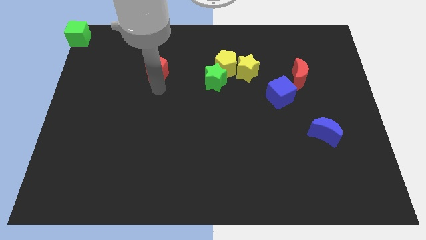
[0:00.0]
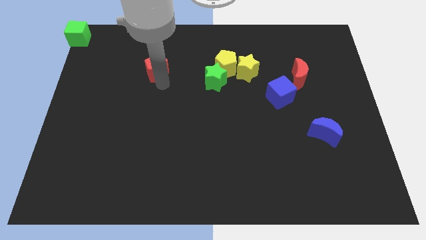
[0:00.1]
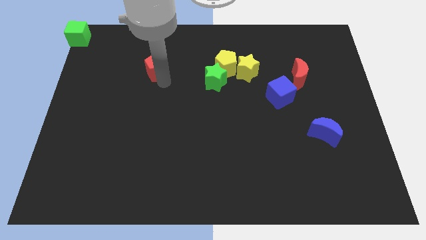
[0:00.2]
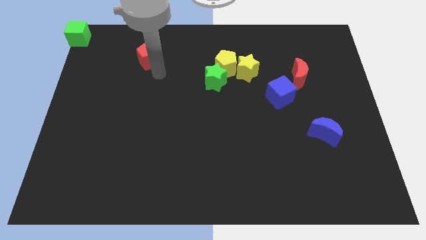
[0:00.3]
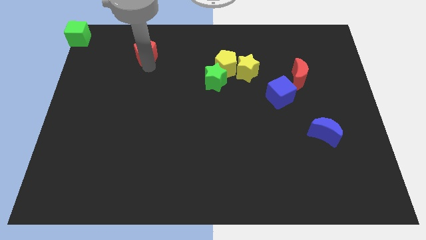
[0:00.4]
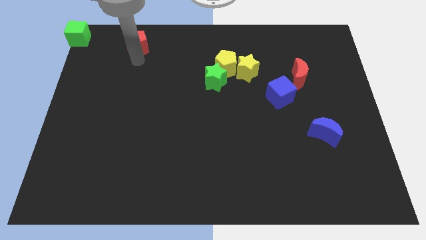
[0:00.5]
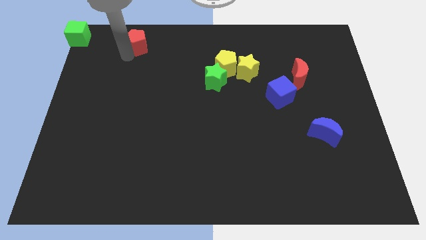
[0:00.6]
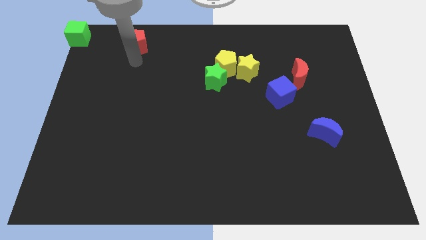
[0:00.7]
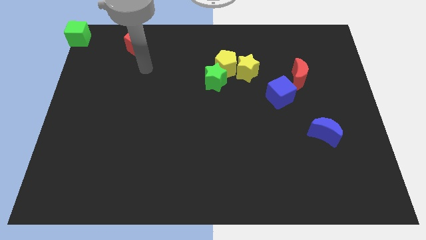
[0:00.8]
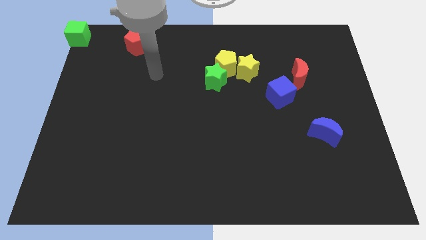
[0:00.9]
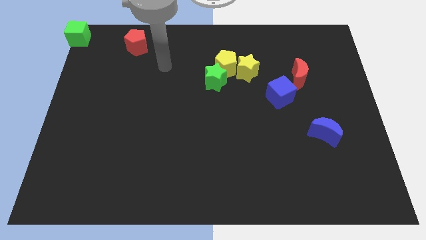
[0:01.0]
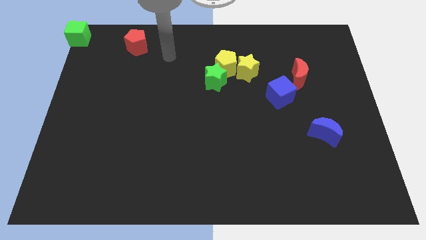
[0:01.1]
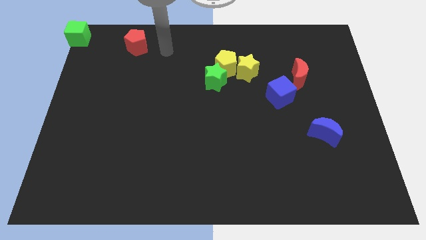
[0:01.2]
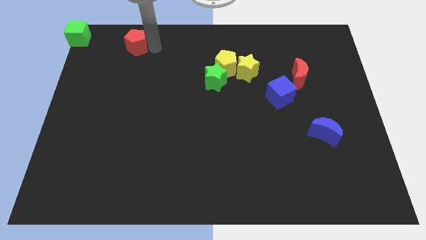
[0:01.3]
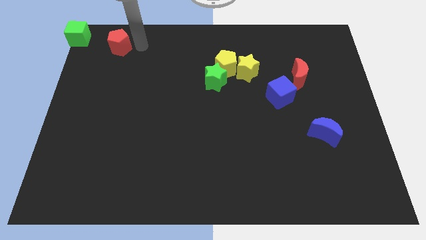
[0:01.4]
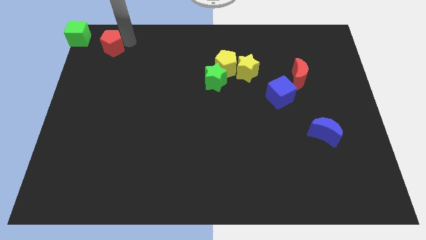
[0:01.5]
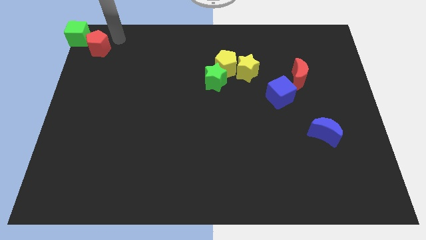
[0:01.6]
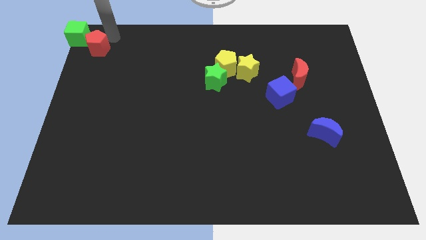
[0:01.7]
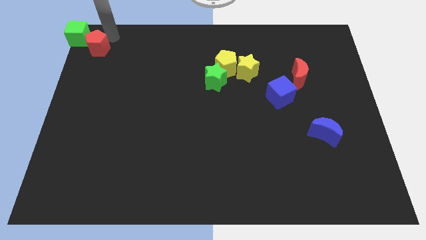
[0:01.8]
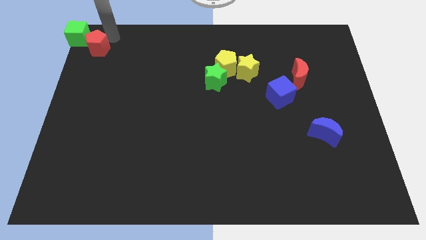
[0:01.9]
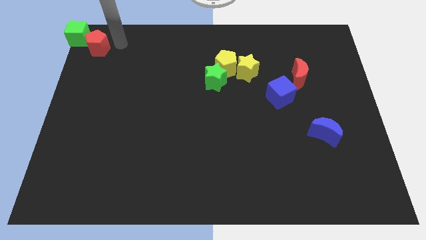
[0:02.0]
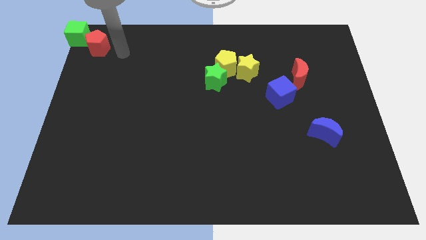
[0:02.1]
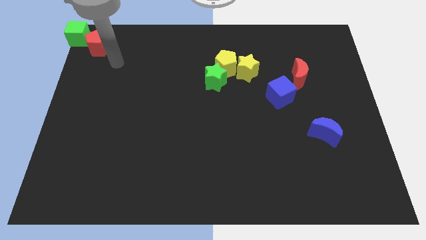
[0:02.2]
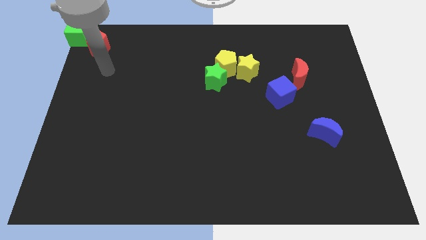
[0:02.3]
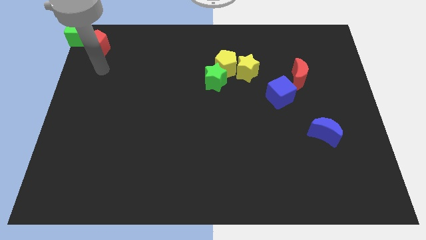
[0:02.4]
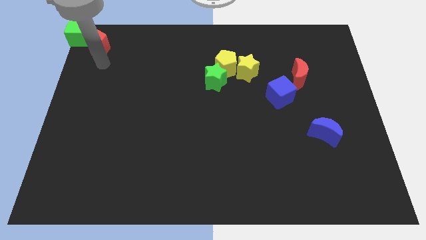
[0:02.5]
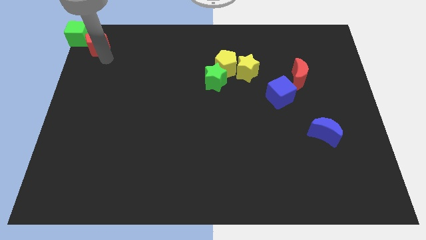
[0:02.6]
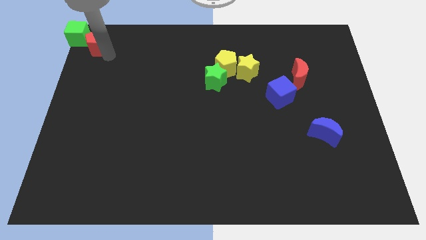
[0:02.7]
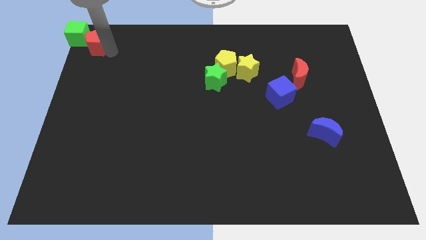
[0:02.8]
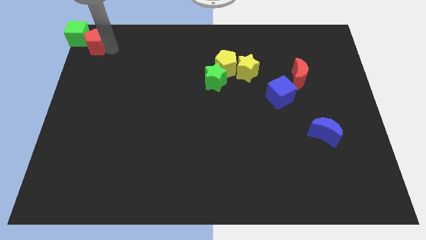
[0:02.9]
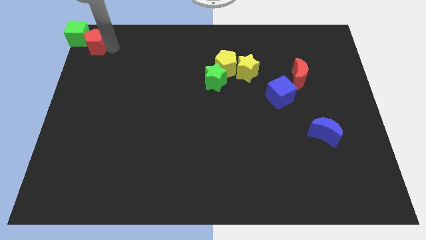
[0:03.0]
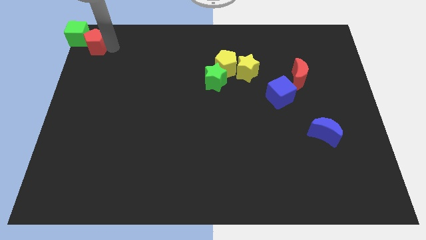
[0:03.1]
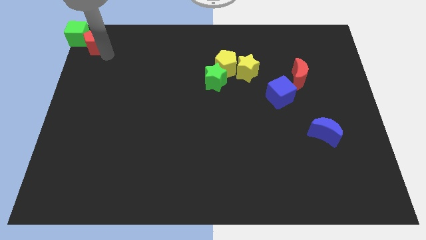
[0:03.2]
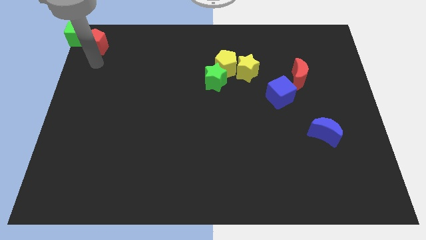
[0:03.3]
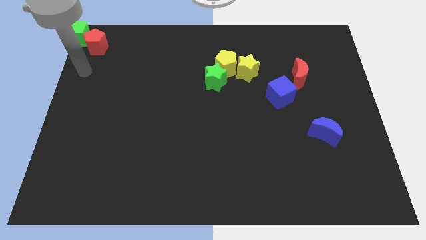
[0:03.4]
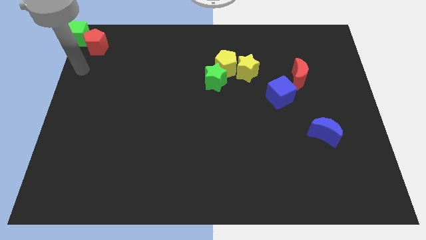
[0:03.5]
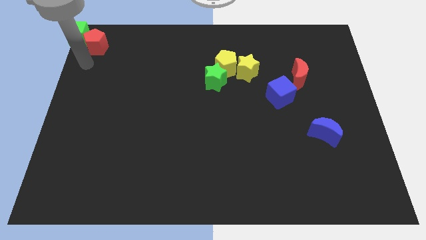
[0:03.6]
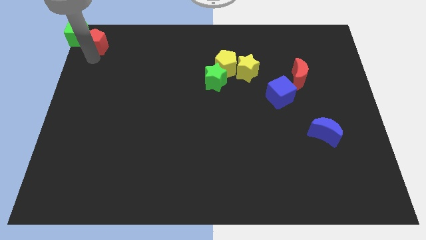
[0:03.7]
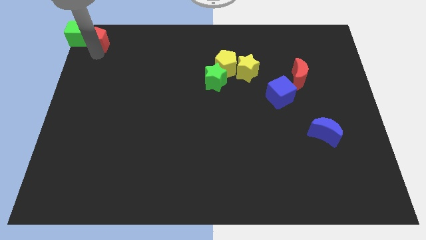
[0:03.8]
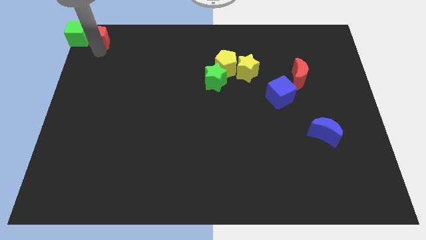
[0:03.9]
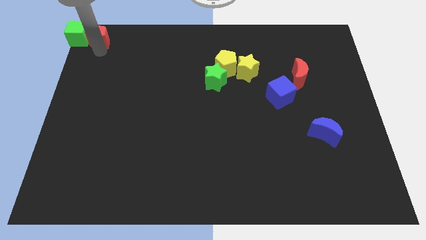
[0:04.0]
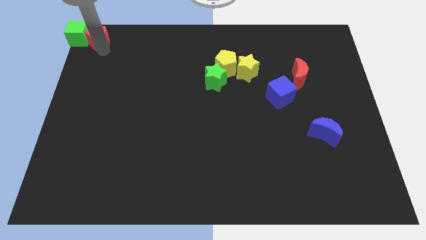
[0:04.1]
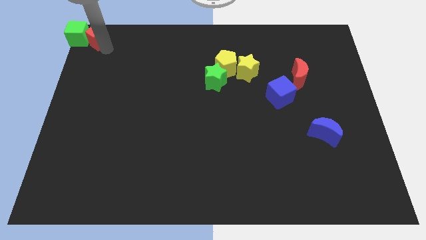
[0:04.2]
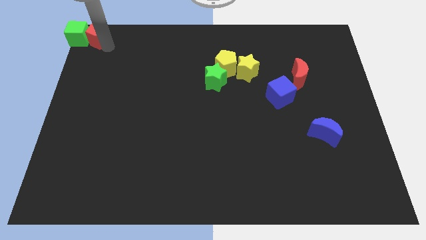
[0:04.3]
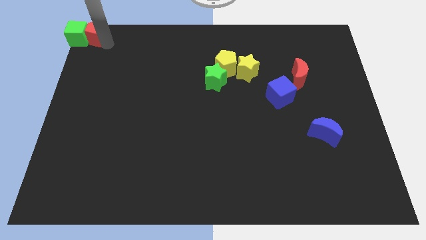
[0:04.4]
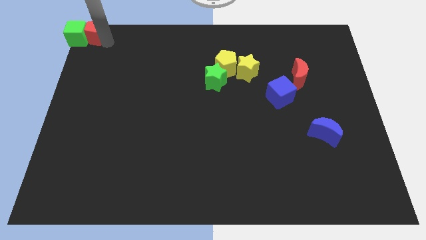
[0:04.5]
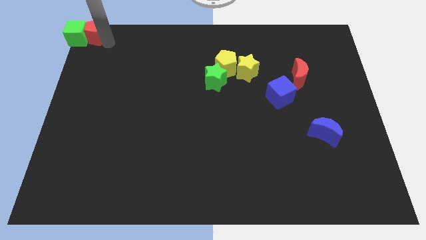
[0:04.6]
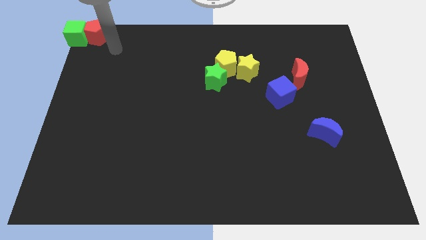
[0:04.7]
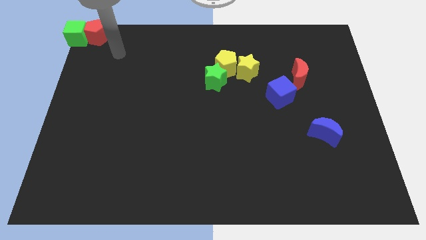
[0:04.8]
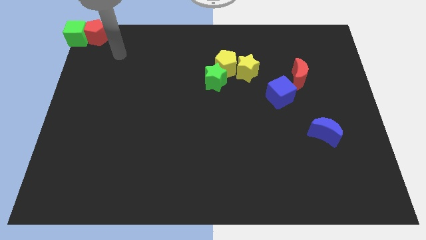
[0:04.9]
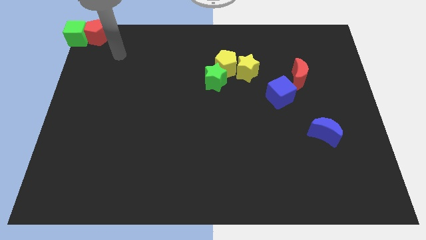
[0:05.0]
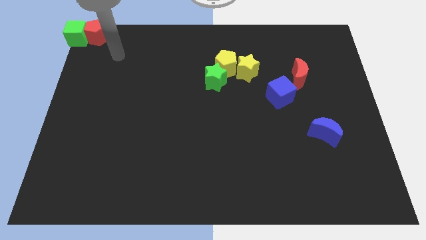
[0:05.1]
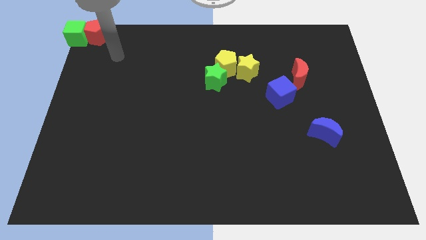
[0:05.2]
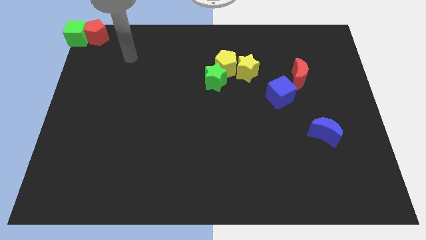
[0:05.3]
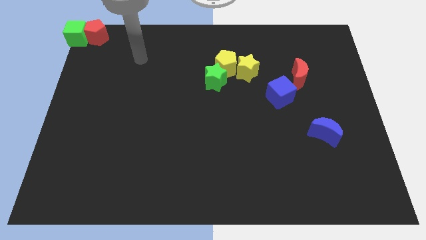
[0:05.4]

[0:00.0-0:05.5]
place the red pentagon to the right of the green cube

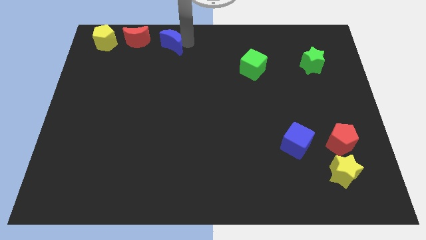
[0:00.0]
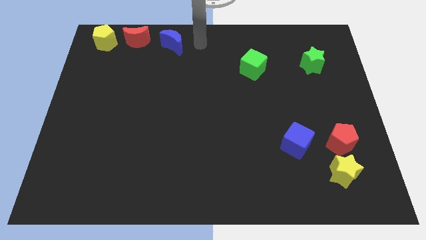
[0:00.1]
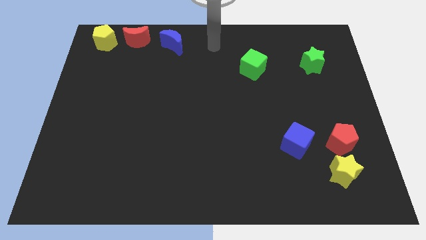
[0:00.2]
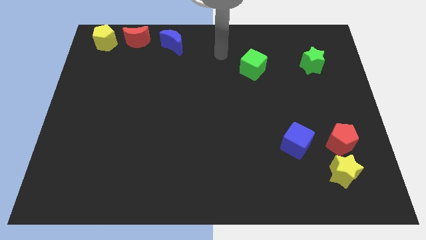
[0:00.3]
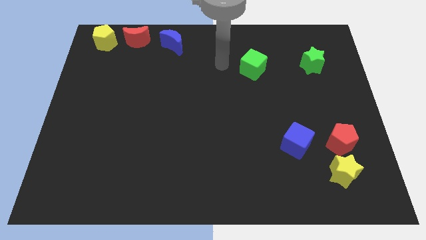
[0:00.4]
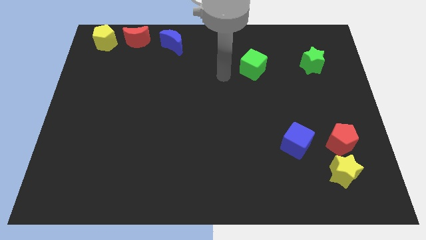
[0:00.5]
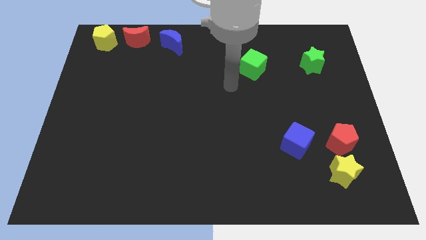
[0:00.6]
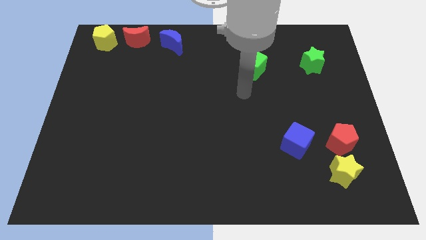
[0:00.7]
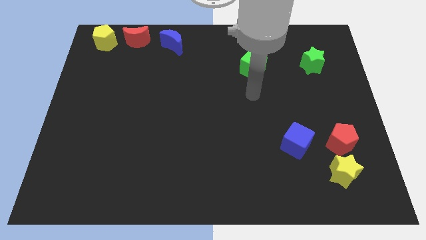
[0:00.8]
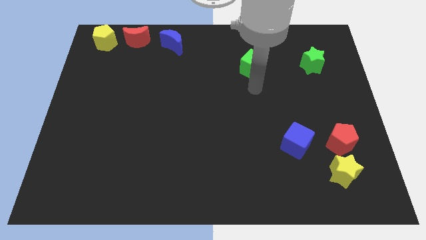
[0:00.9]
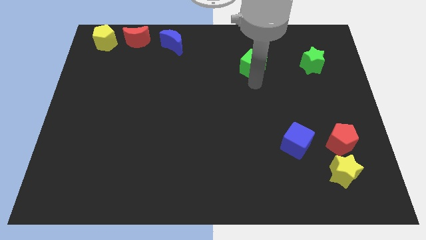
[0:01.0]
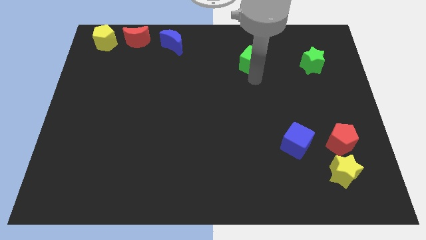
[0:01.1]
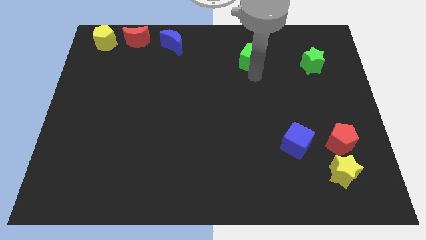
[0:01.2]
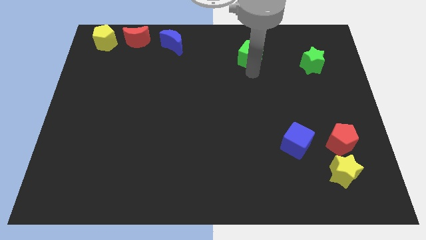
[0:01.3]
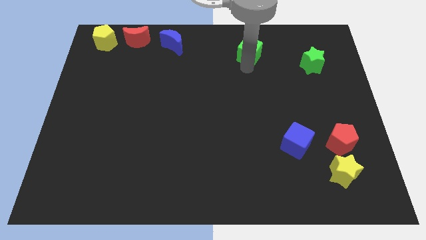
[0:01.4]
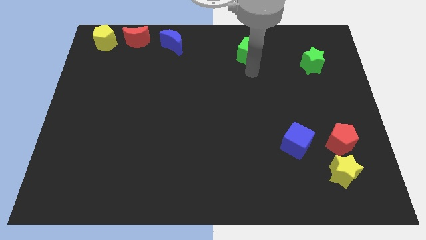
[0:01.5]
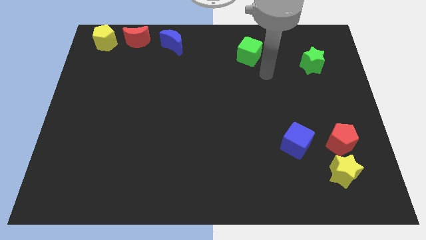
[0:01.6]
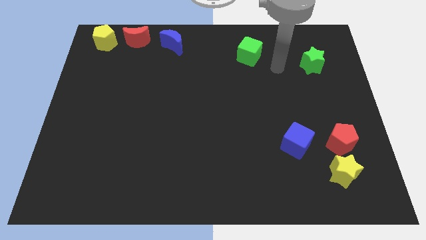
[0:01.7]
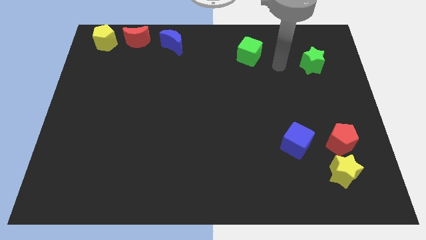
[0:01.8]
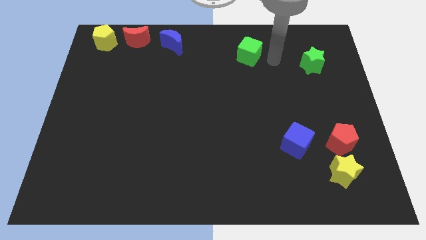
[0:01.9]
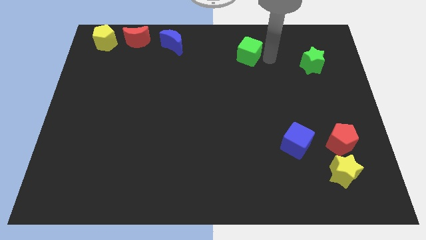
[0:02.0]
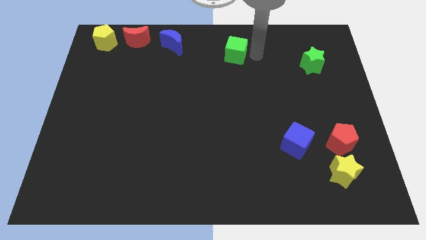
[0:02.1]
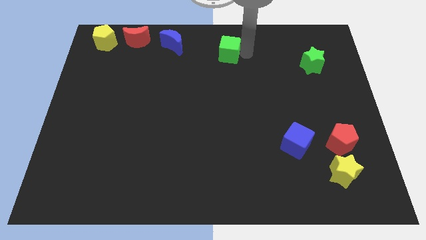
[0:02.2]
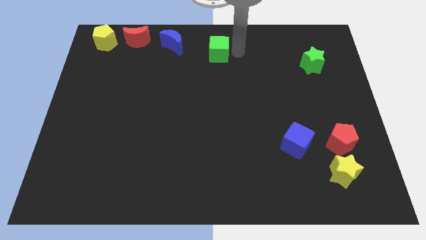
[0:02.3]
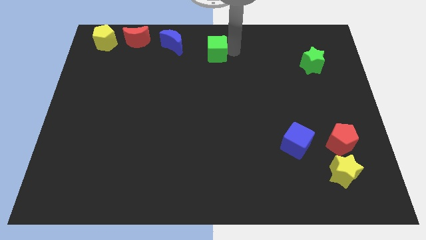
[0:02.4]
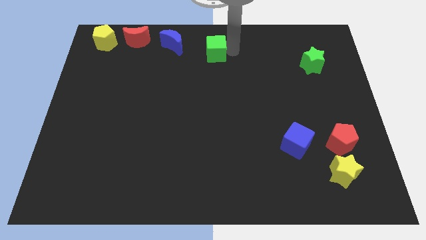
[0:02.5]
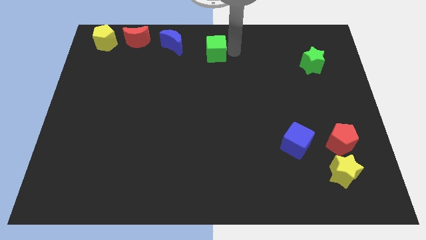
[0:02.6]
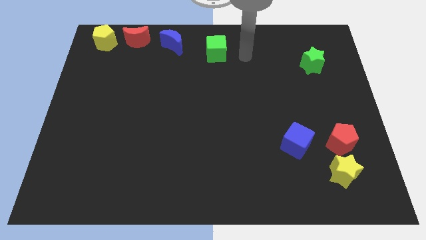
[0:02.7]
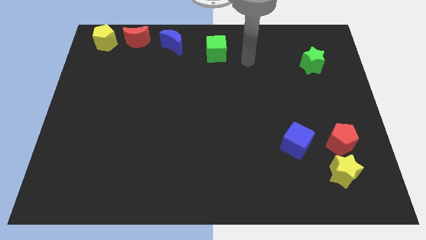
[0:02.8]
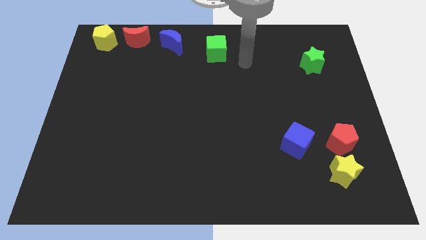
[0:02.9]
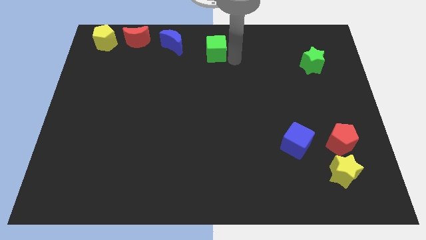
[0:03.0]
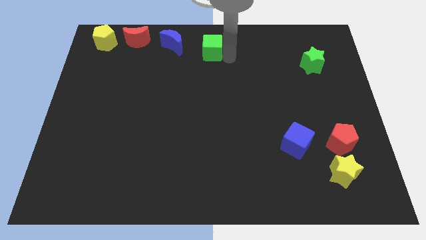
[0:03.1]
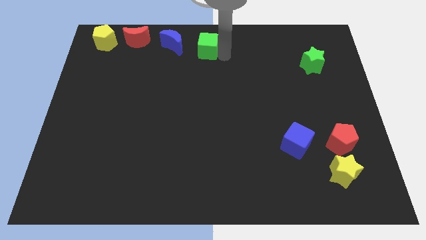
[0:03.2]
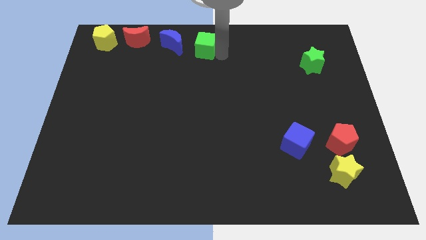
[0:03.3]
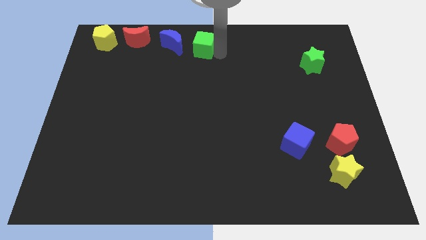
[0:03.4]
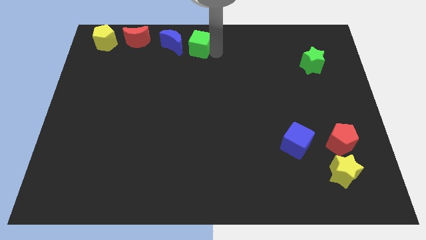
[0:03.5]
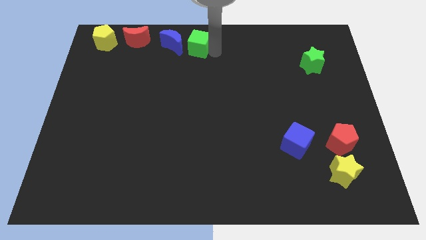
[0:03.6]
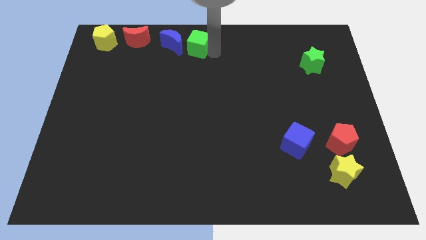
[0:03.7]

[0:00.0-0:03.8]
push the green cube close to the right side of the blue crescent
